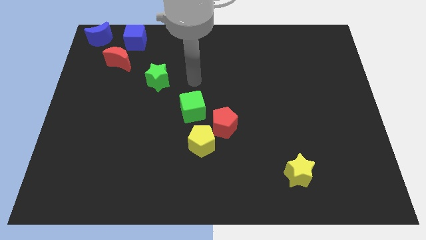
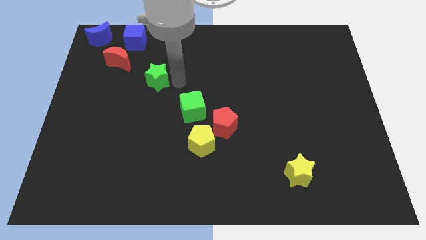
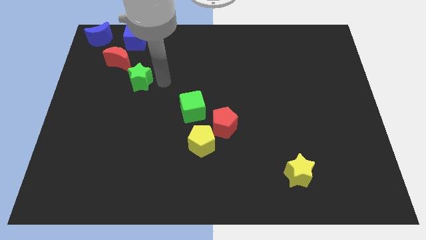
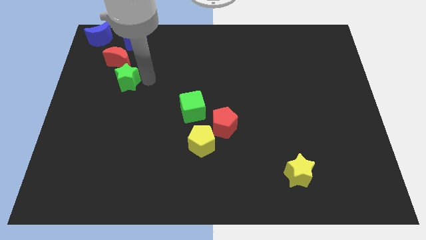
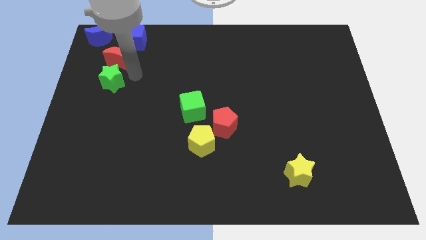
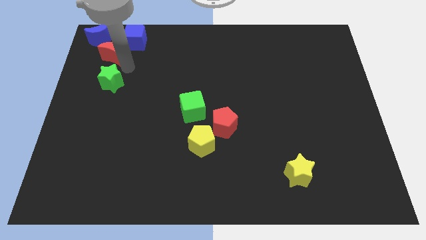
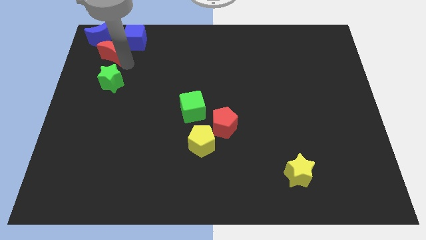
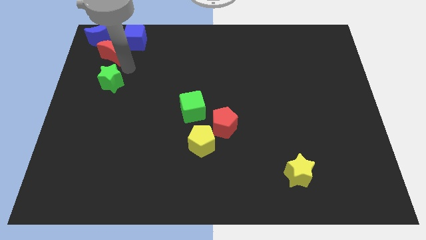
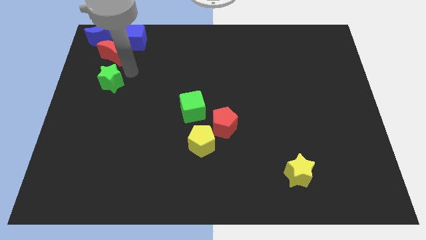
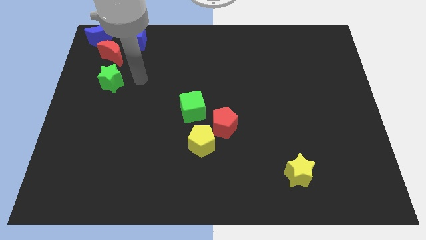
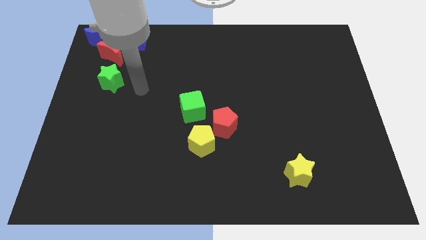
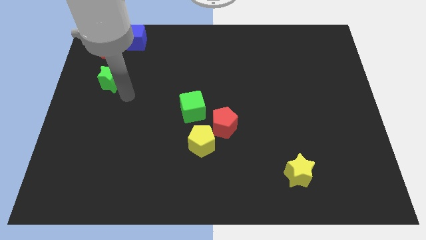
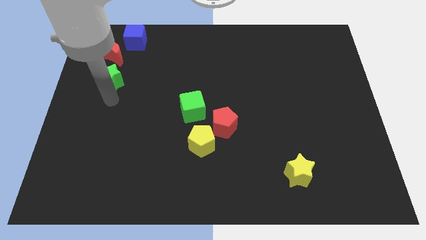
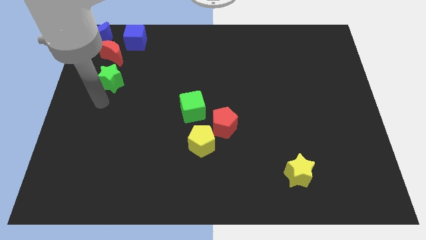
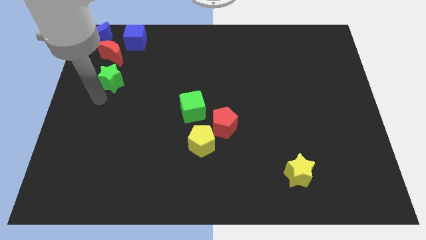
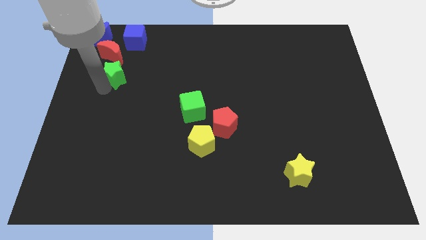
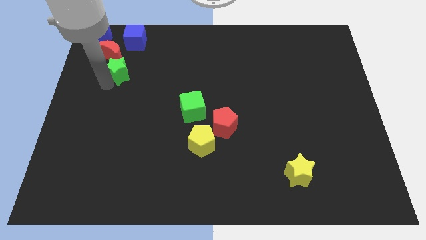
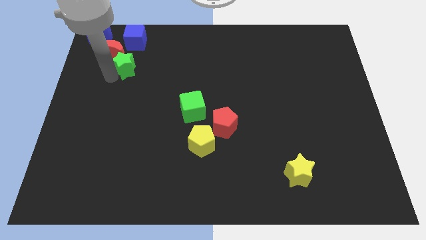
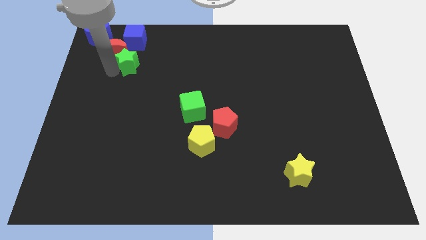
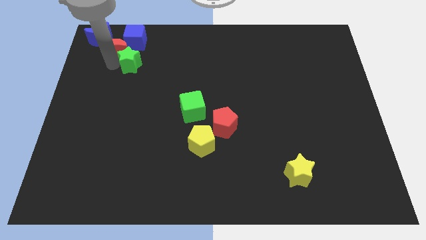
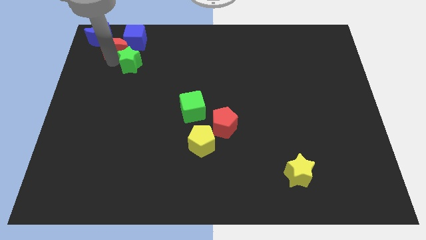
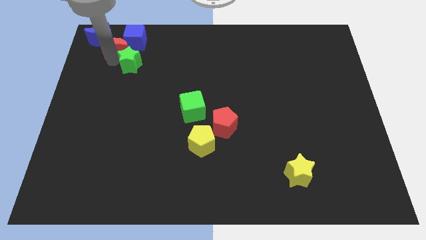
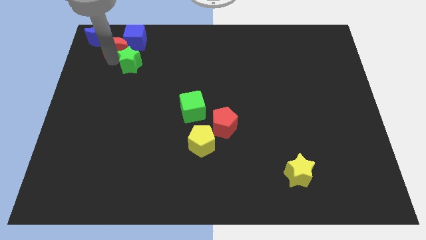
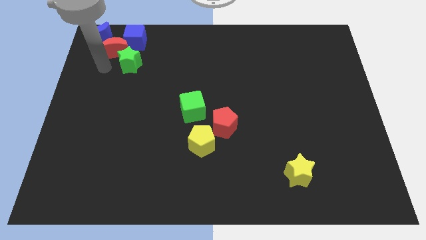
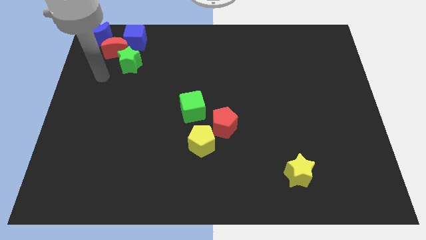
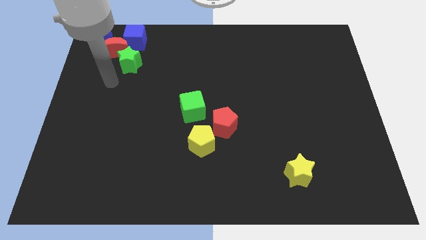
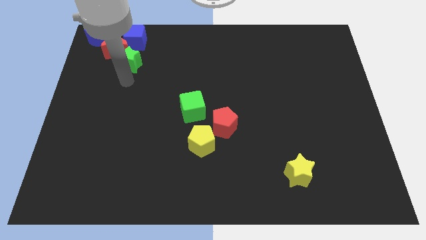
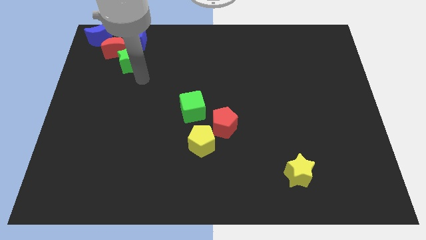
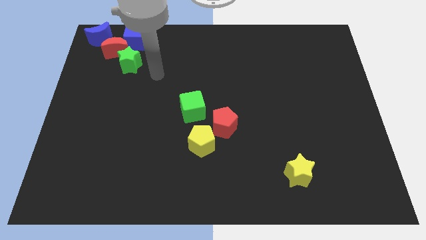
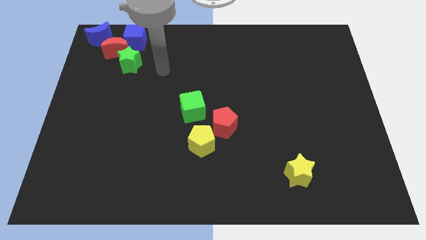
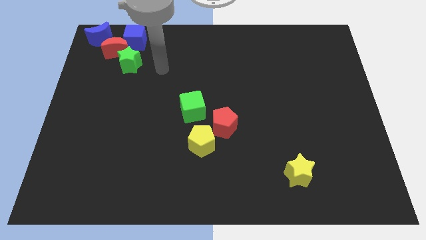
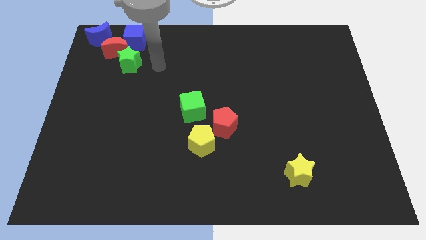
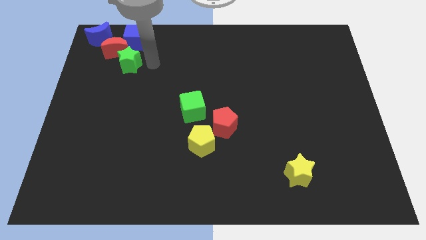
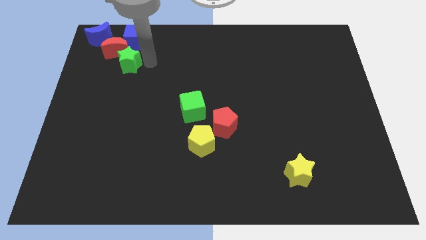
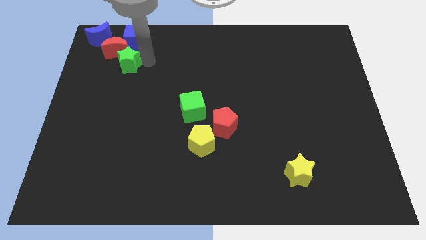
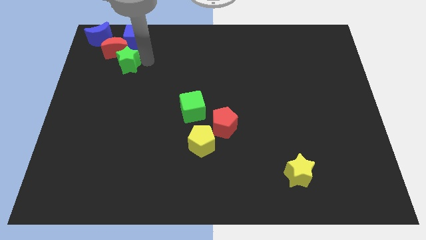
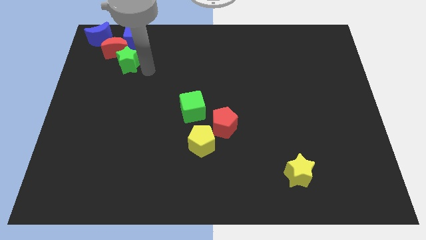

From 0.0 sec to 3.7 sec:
push green star into red moon

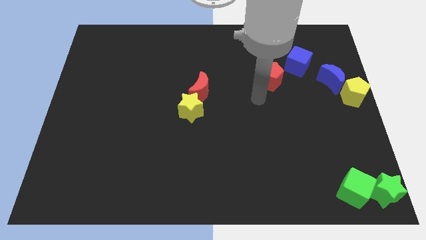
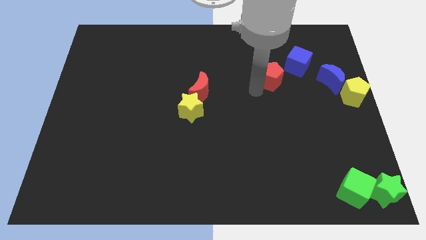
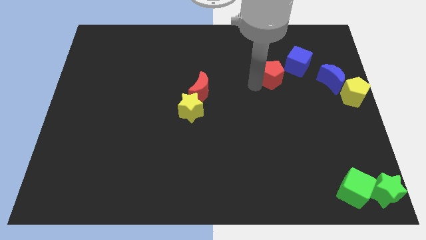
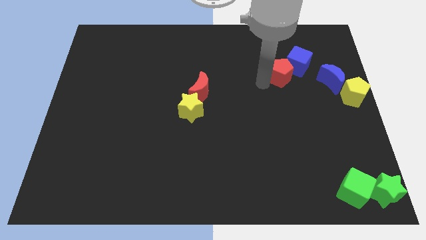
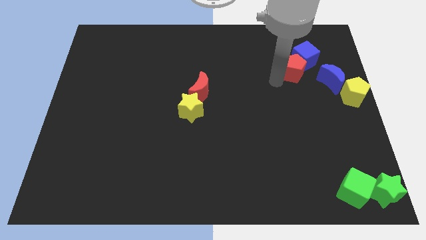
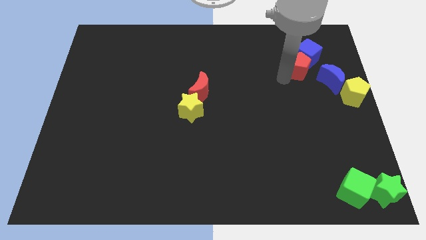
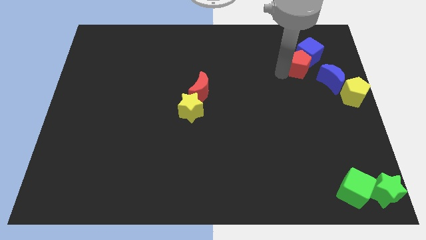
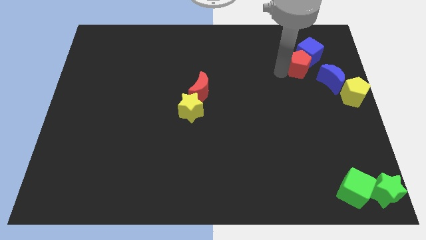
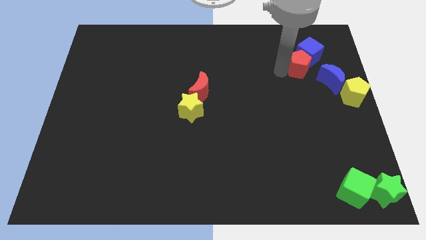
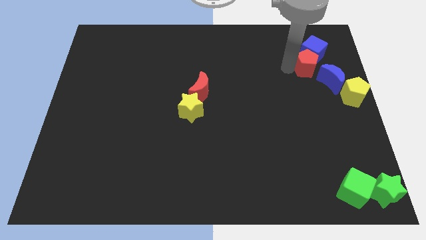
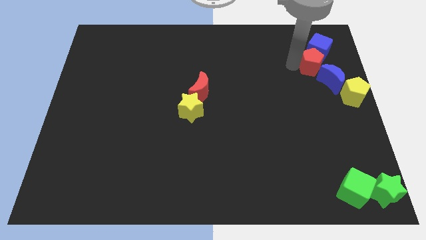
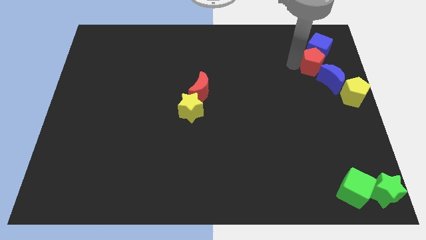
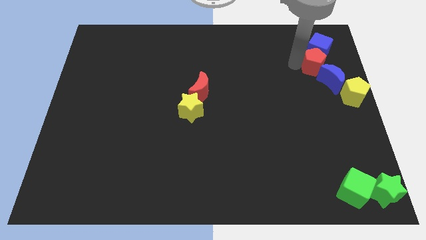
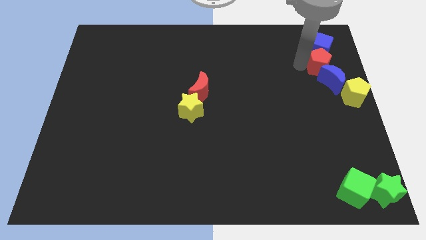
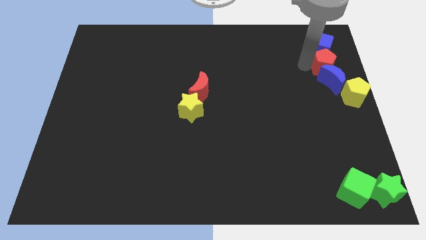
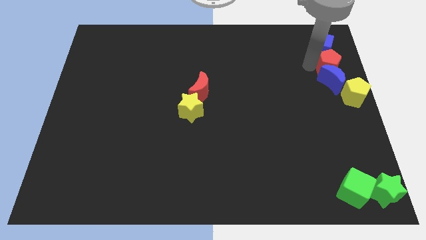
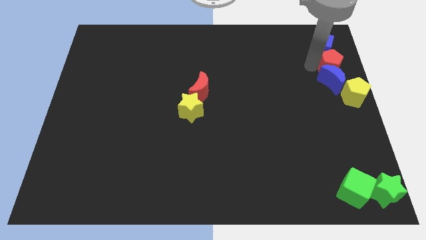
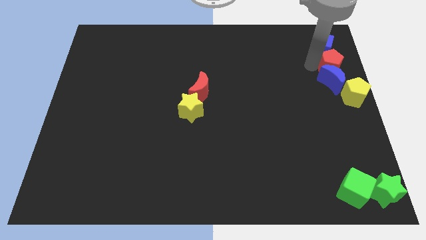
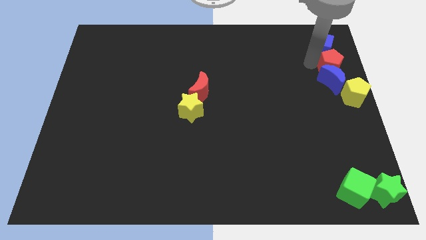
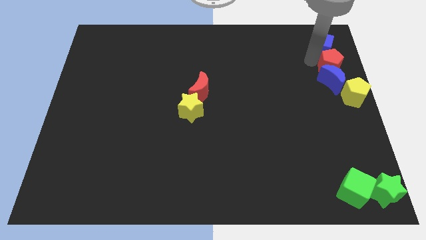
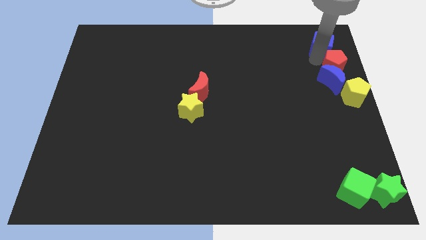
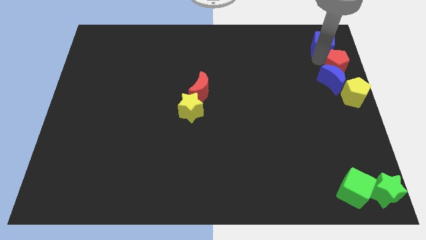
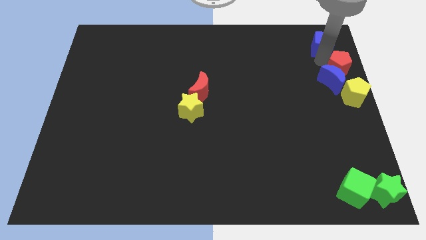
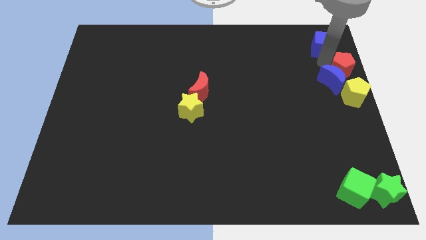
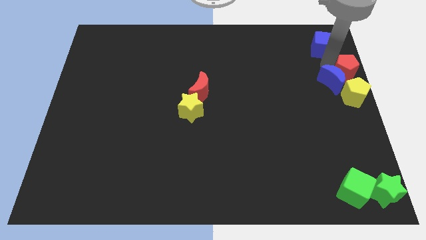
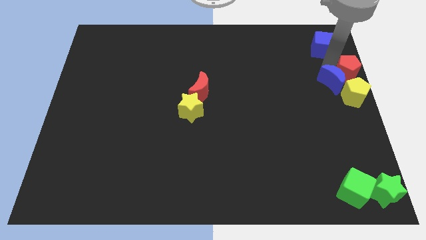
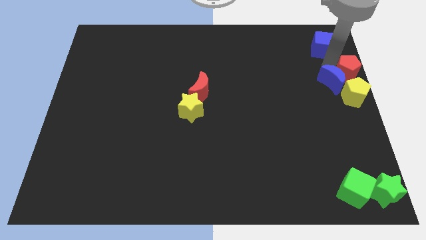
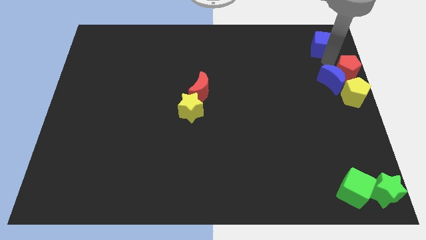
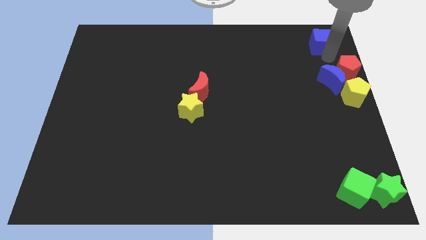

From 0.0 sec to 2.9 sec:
push the red pentagon to the top of the yellow pentagon

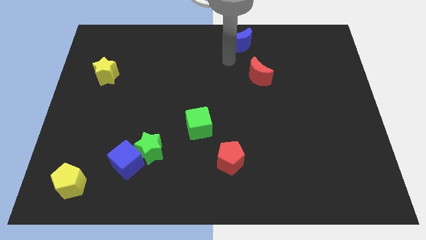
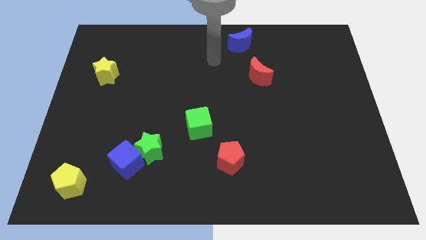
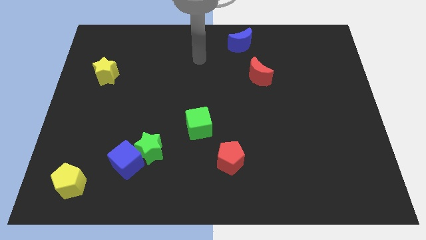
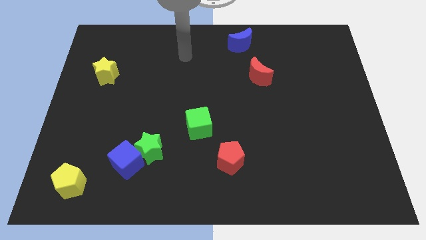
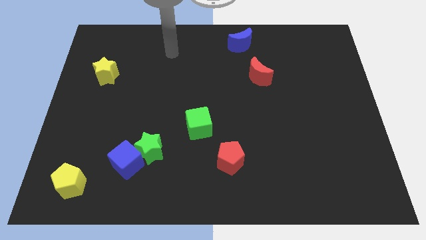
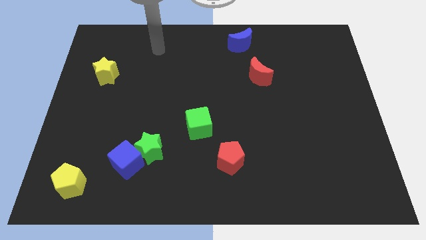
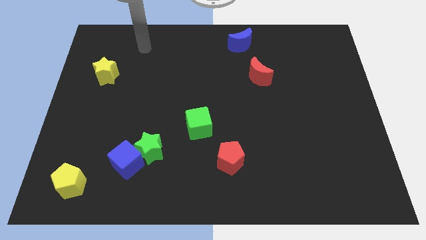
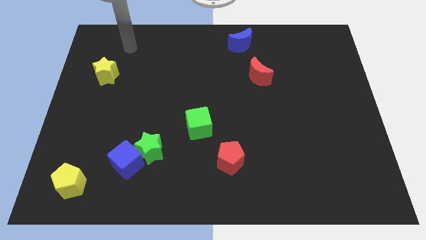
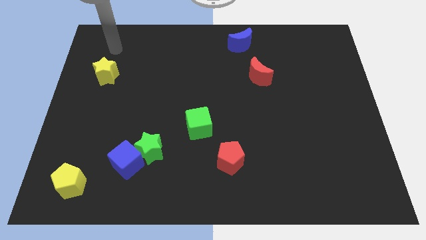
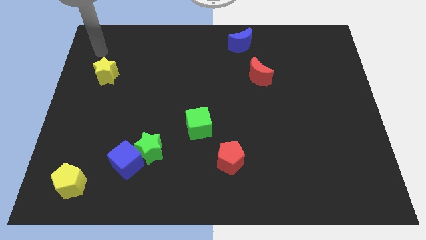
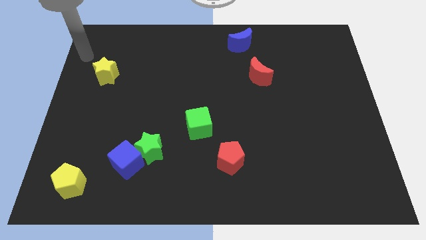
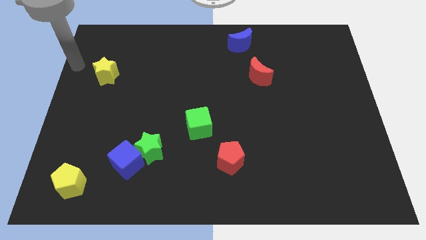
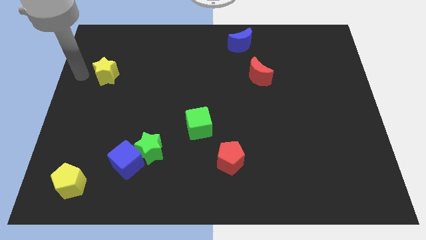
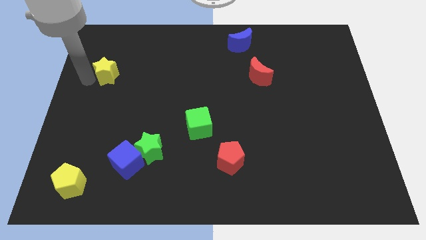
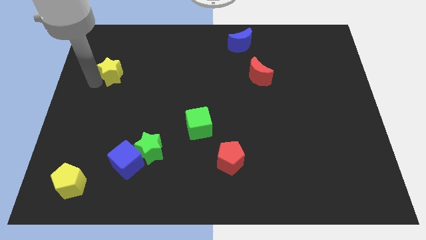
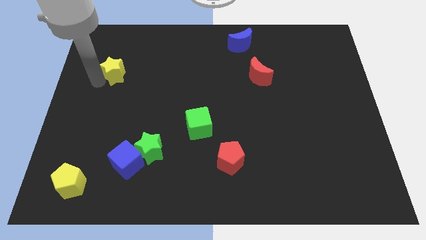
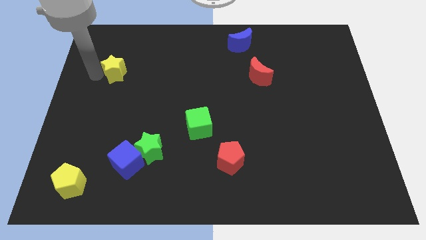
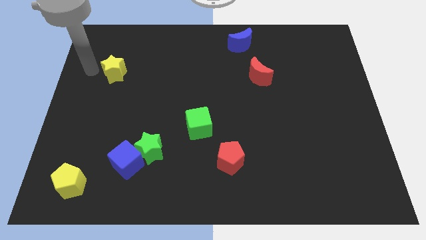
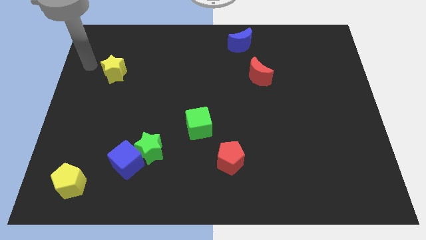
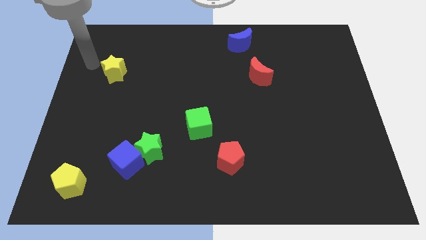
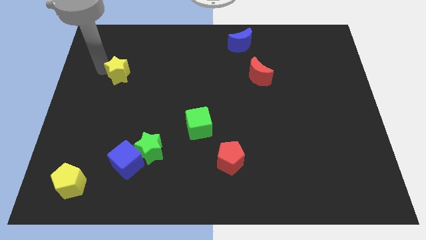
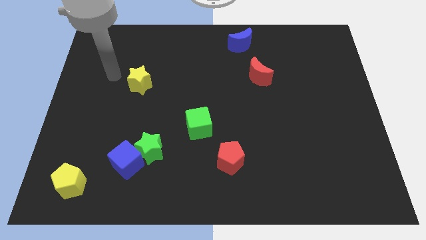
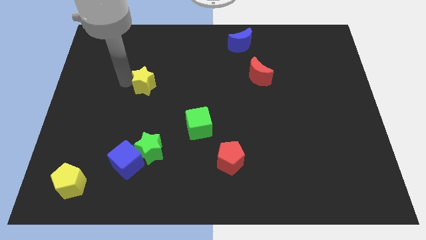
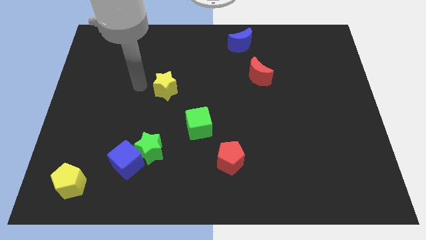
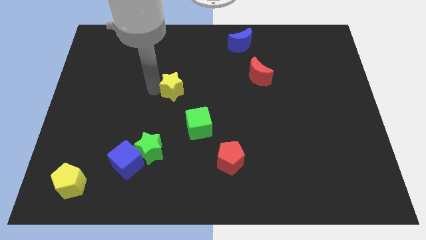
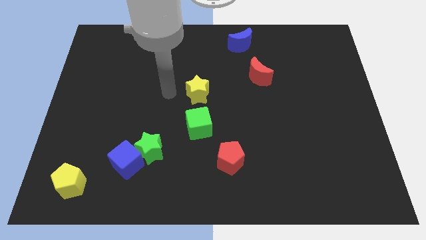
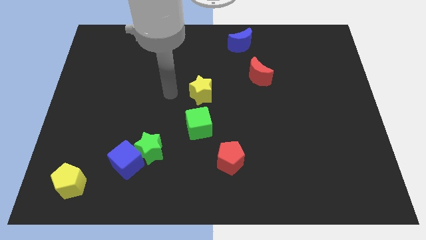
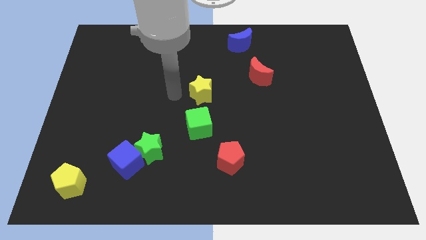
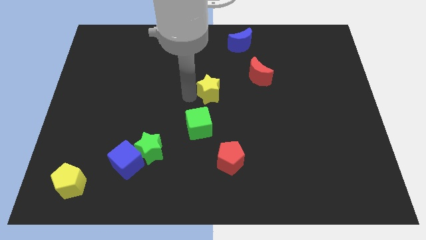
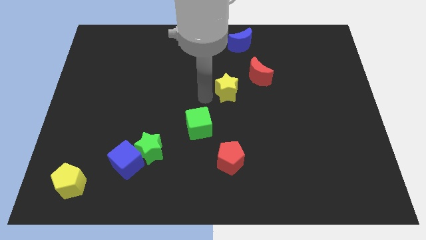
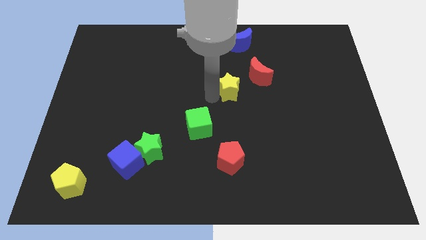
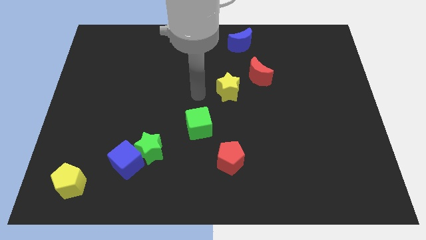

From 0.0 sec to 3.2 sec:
place the yellow star vertically to the top side of the red pentagon
